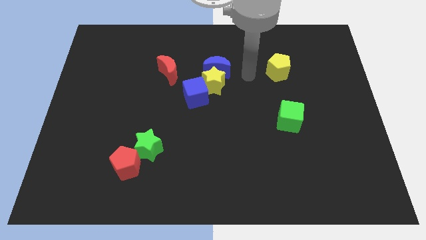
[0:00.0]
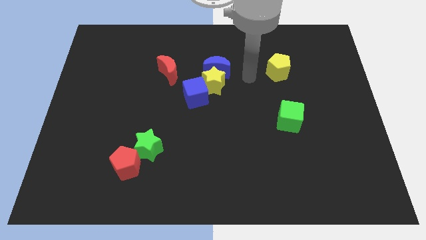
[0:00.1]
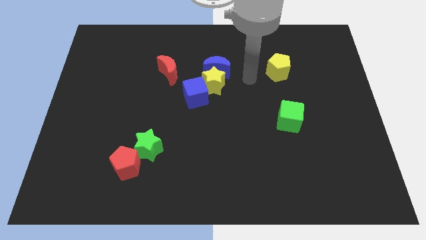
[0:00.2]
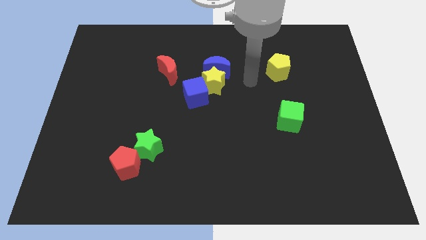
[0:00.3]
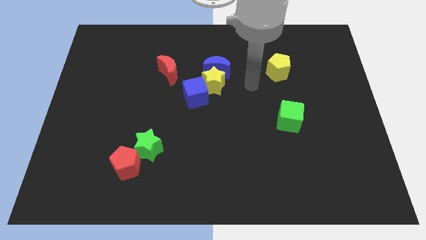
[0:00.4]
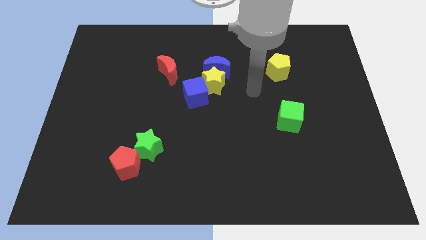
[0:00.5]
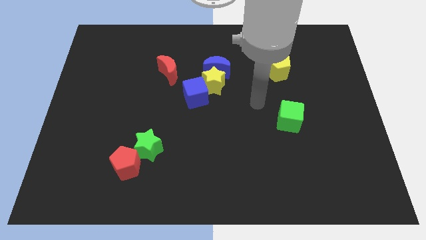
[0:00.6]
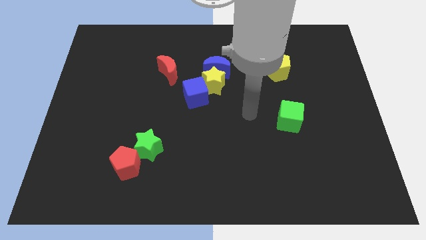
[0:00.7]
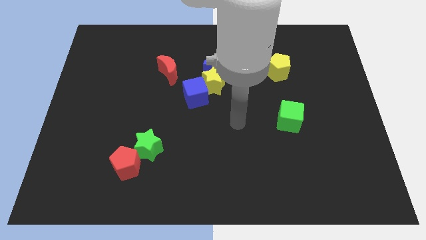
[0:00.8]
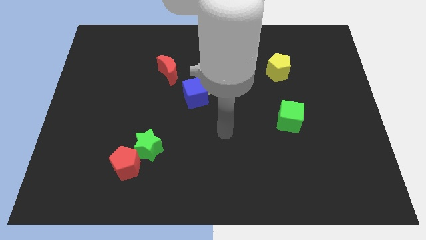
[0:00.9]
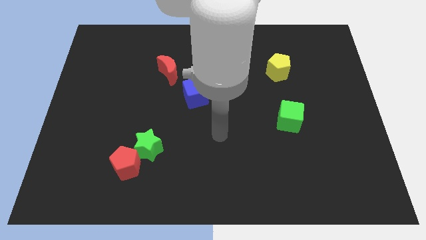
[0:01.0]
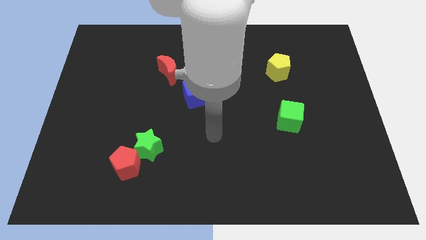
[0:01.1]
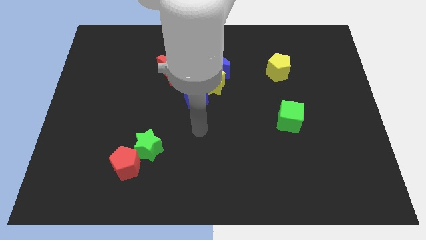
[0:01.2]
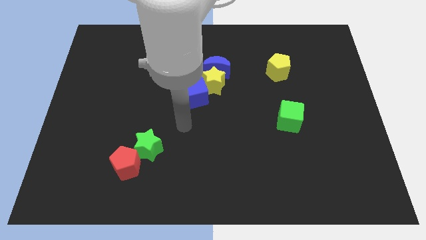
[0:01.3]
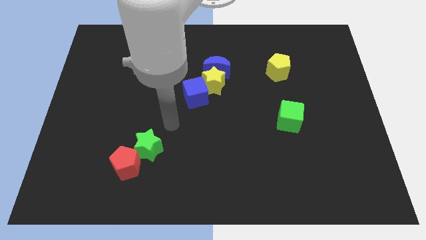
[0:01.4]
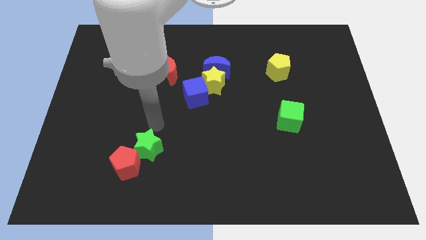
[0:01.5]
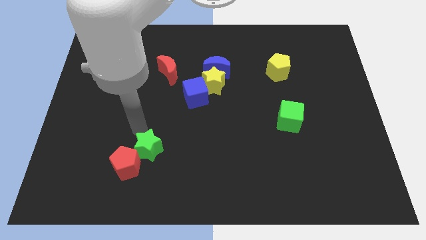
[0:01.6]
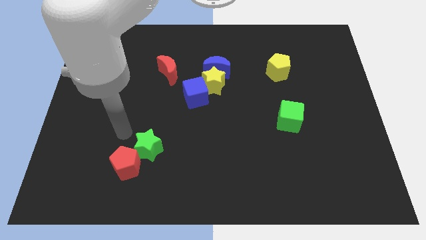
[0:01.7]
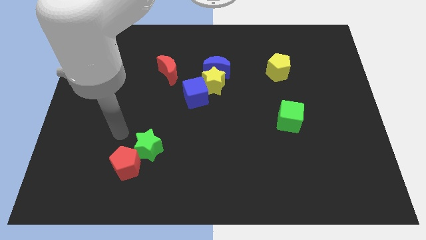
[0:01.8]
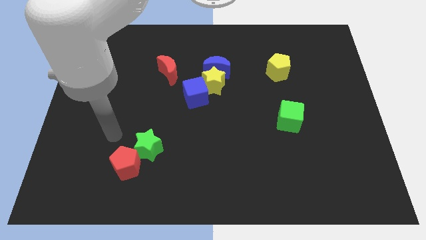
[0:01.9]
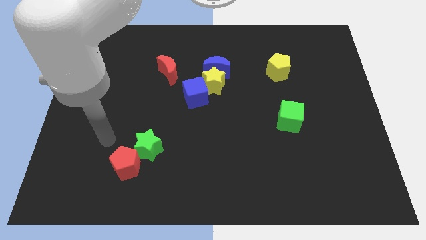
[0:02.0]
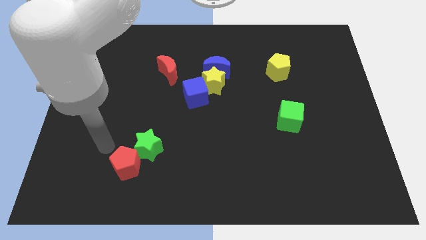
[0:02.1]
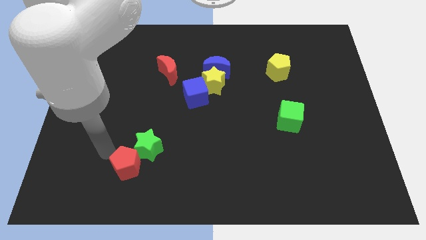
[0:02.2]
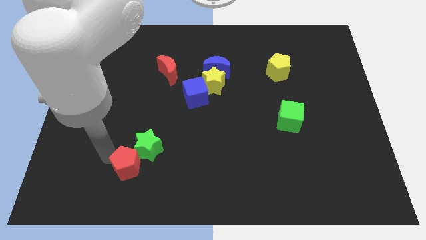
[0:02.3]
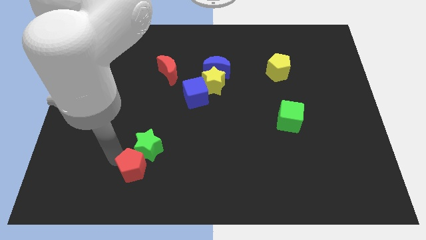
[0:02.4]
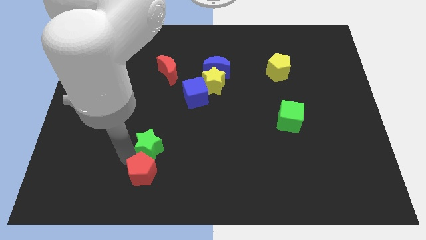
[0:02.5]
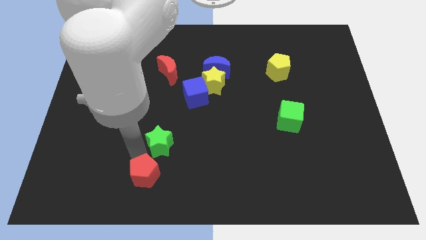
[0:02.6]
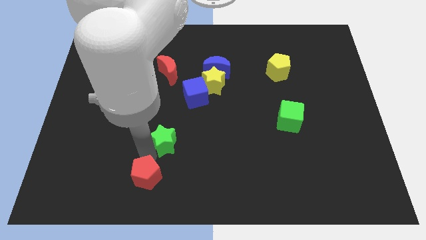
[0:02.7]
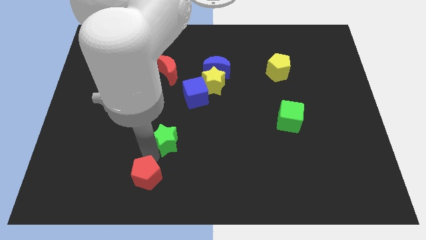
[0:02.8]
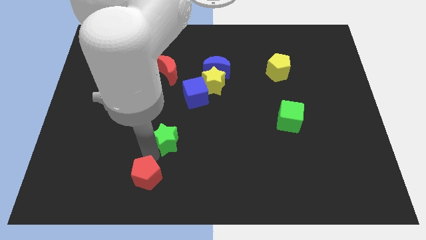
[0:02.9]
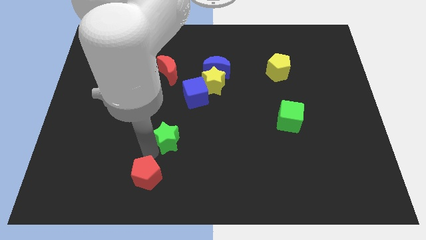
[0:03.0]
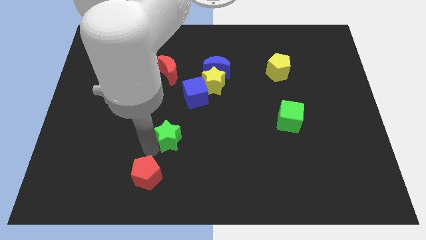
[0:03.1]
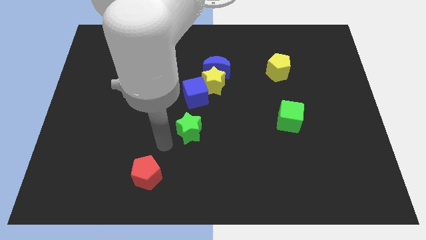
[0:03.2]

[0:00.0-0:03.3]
move your arm close to the green star

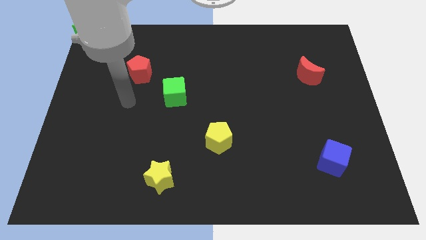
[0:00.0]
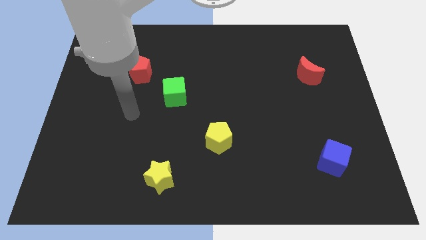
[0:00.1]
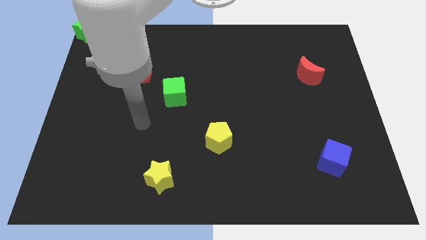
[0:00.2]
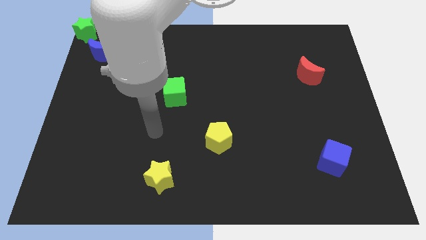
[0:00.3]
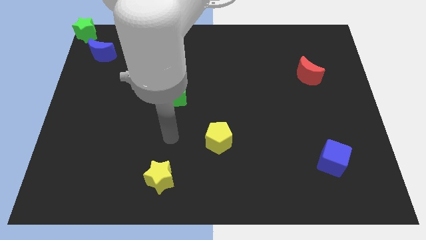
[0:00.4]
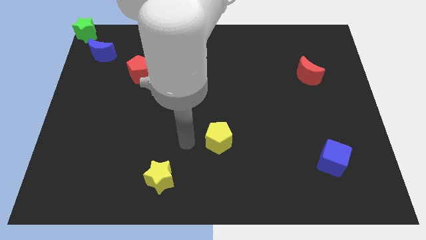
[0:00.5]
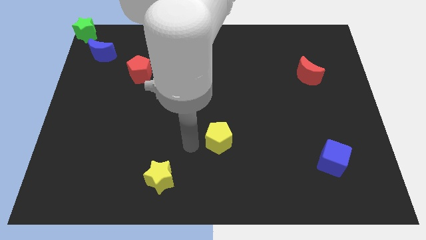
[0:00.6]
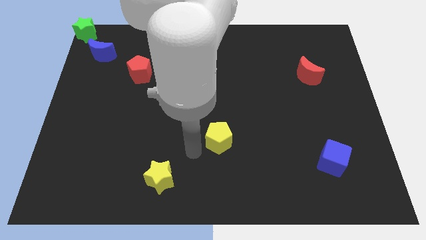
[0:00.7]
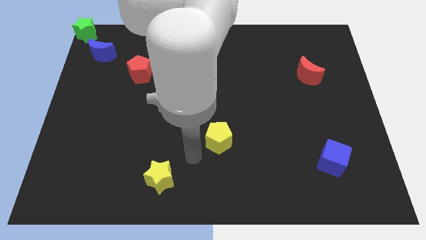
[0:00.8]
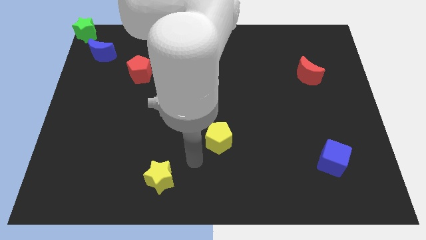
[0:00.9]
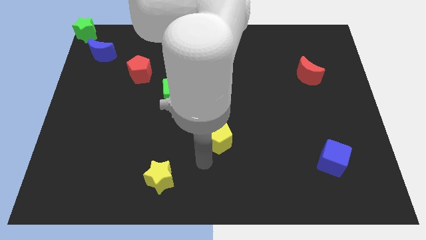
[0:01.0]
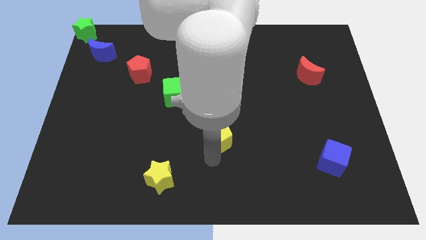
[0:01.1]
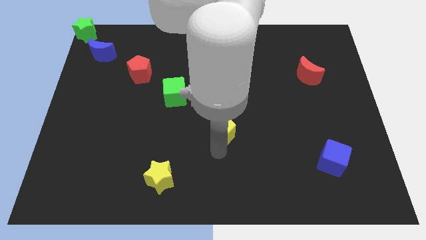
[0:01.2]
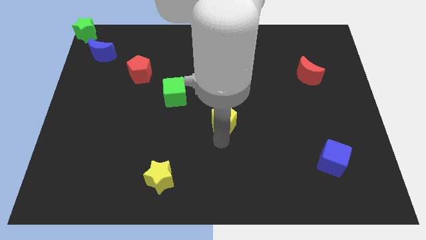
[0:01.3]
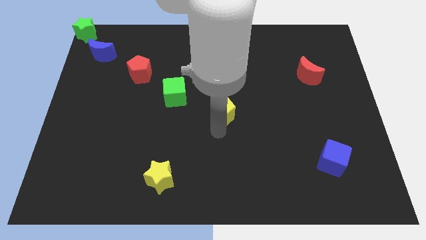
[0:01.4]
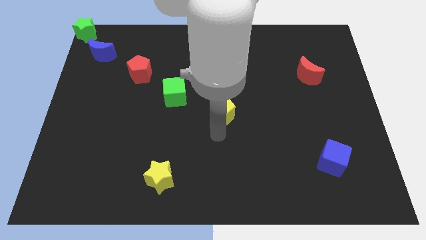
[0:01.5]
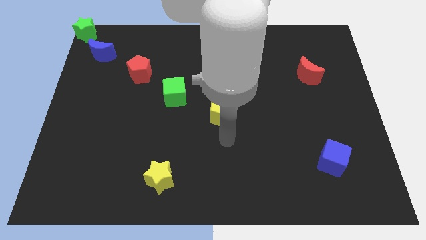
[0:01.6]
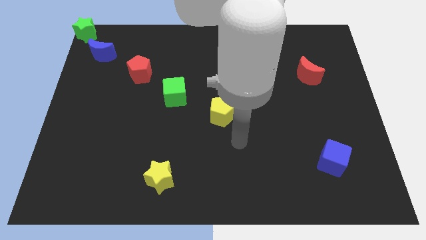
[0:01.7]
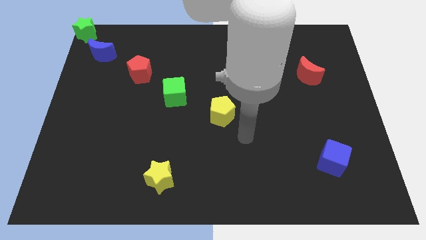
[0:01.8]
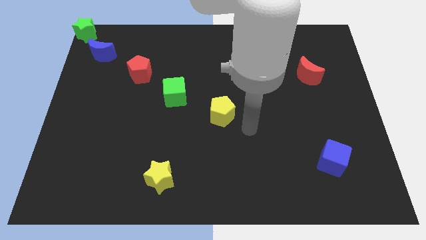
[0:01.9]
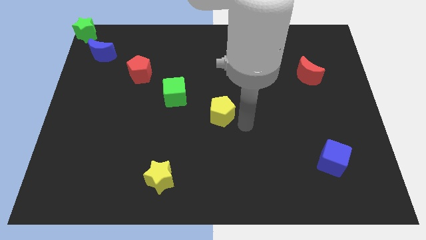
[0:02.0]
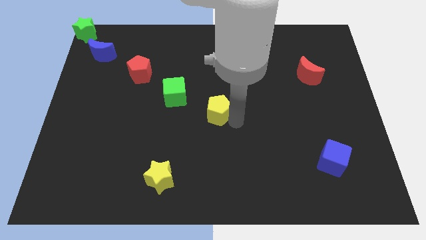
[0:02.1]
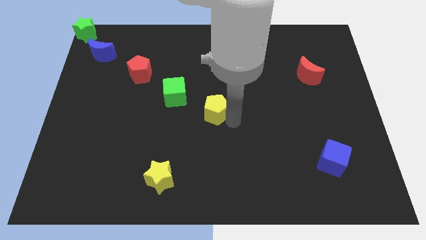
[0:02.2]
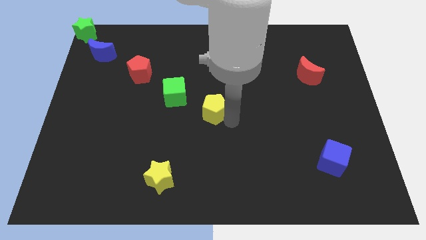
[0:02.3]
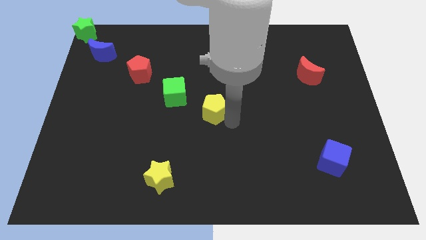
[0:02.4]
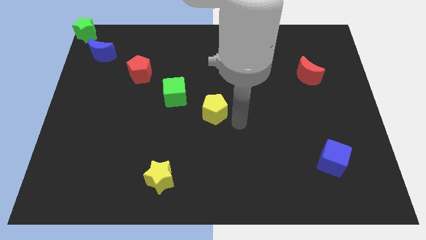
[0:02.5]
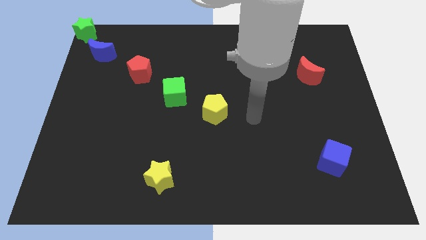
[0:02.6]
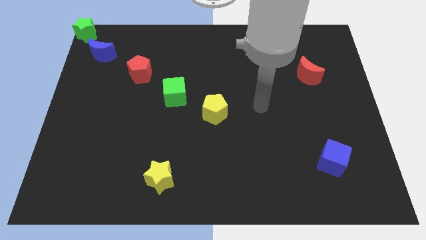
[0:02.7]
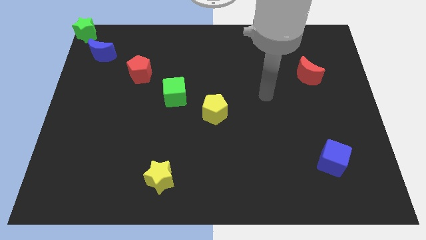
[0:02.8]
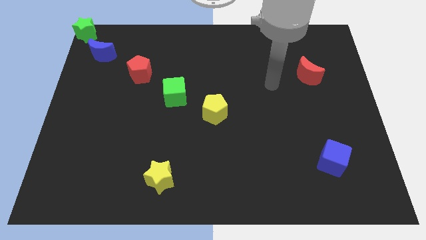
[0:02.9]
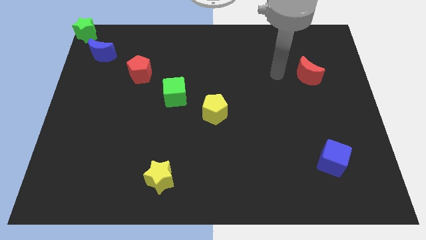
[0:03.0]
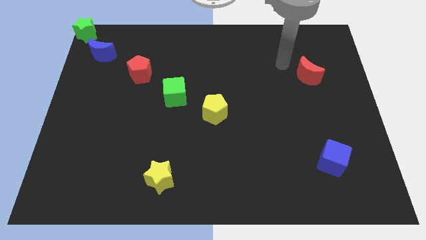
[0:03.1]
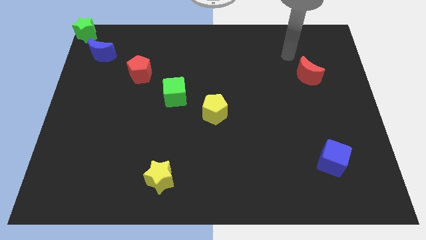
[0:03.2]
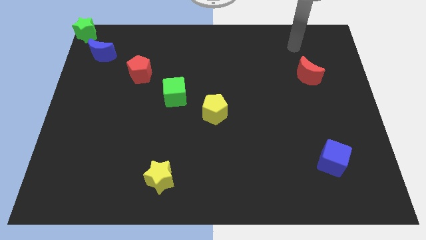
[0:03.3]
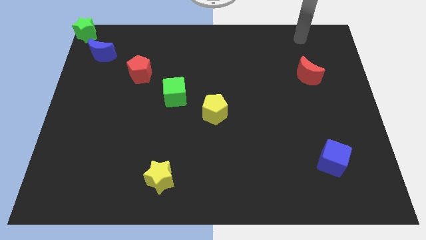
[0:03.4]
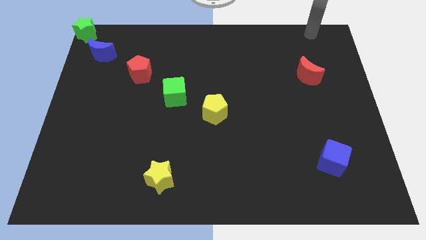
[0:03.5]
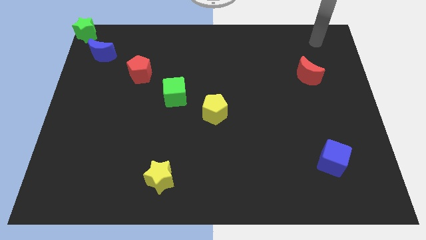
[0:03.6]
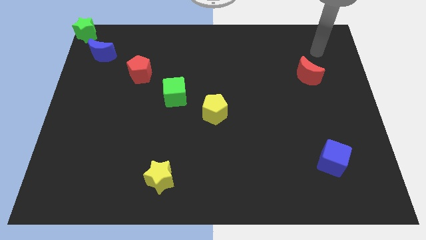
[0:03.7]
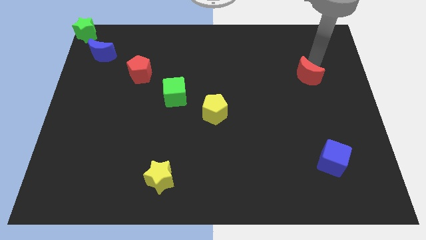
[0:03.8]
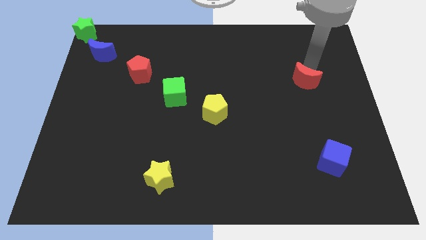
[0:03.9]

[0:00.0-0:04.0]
push the yellow pentagon to the bottom right of the green cube

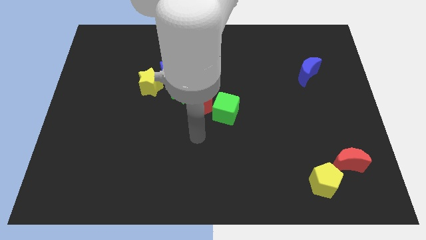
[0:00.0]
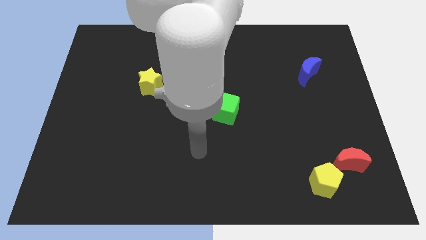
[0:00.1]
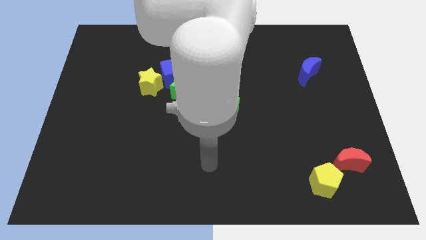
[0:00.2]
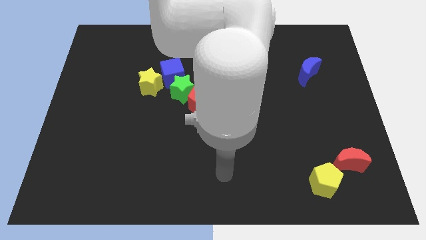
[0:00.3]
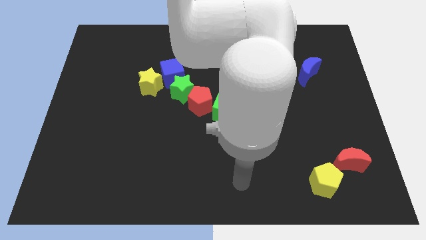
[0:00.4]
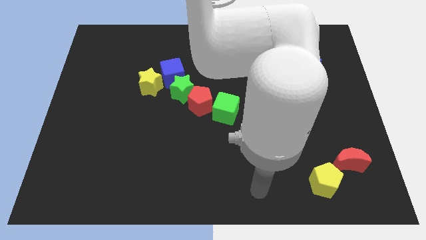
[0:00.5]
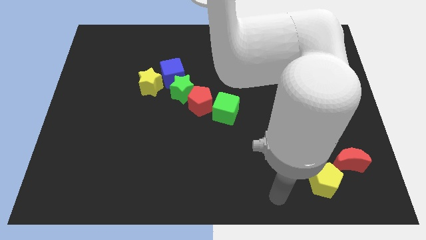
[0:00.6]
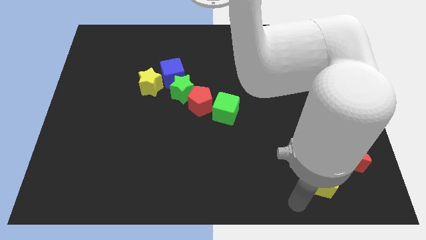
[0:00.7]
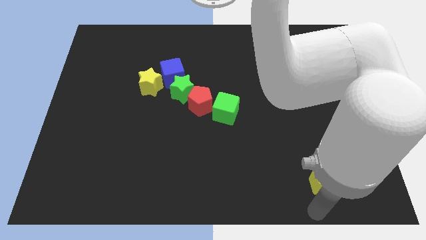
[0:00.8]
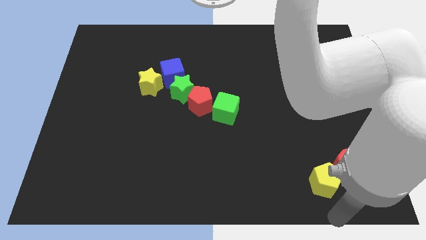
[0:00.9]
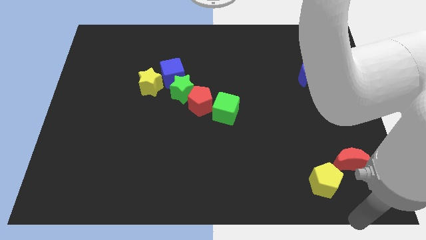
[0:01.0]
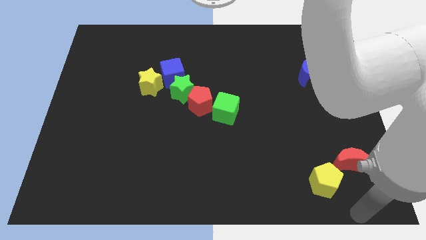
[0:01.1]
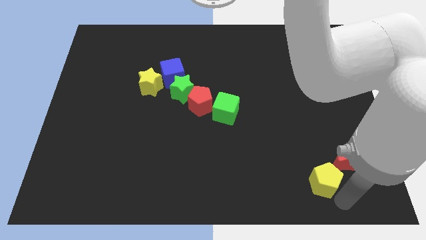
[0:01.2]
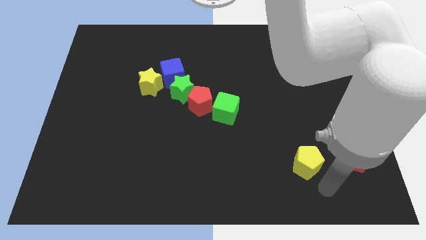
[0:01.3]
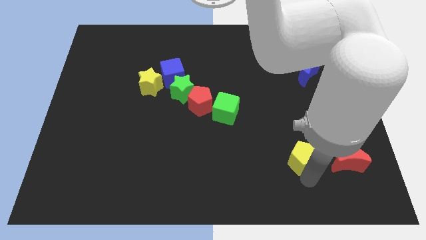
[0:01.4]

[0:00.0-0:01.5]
push the yellow pentagon left to the red moon

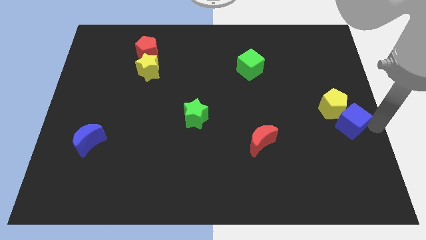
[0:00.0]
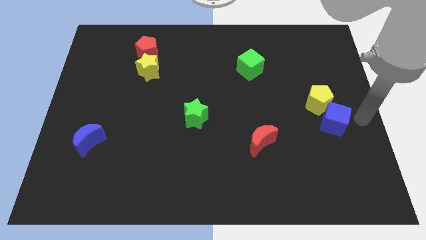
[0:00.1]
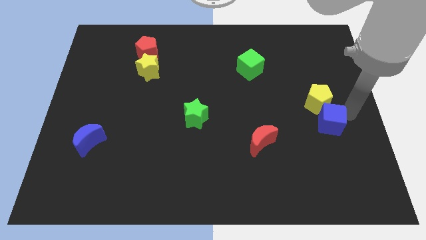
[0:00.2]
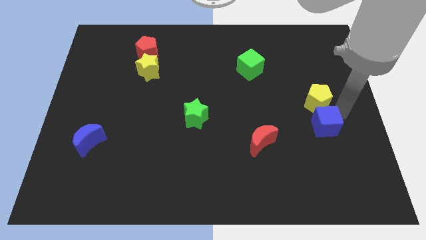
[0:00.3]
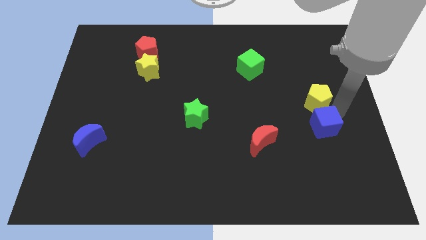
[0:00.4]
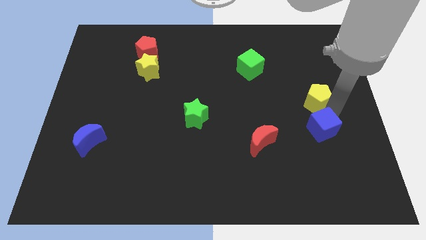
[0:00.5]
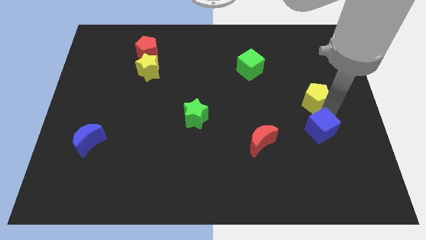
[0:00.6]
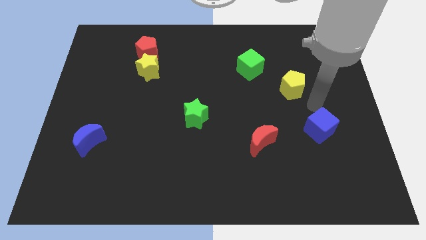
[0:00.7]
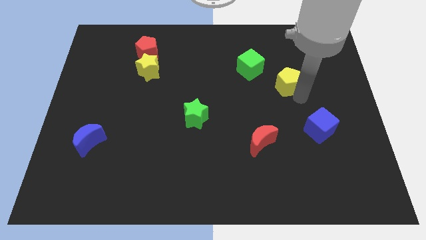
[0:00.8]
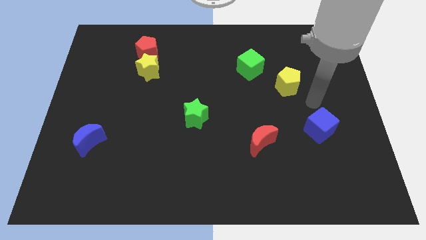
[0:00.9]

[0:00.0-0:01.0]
separate the blue cube and the yellow pentagon
